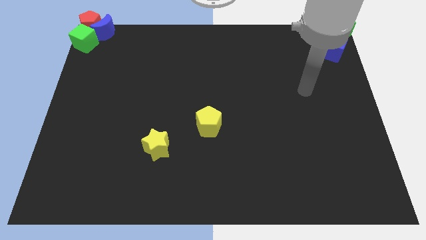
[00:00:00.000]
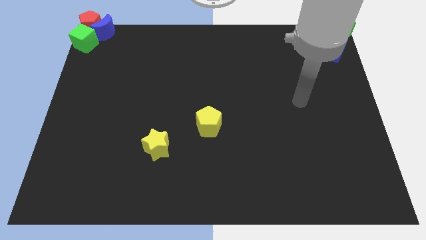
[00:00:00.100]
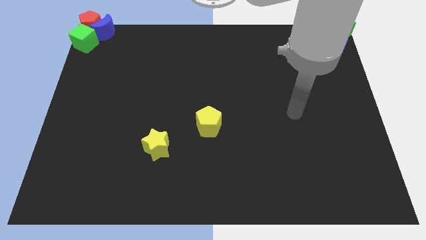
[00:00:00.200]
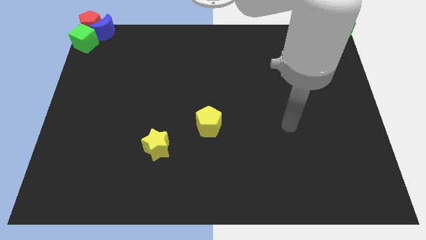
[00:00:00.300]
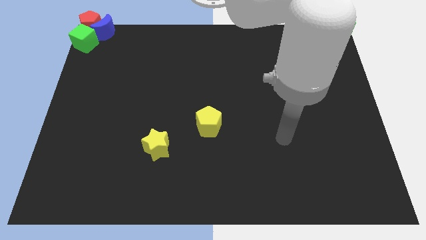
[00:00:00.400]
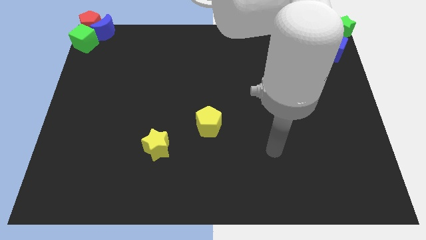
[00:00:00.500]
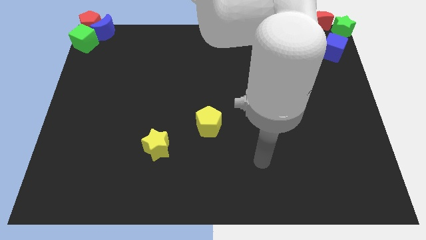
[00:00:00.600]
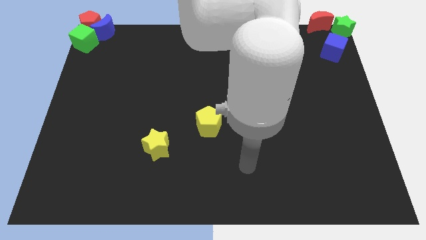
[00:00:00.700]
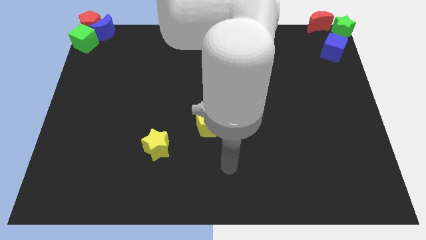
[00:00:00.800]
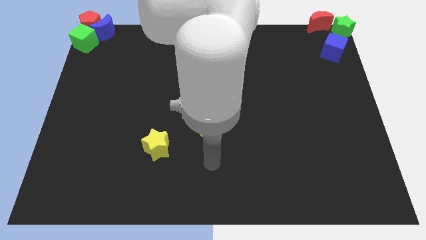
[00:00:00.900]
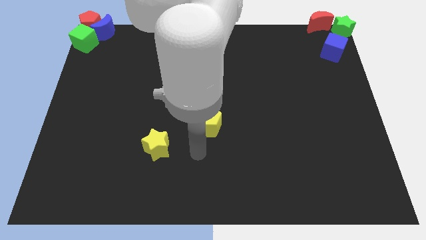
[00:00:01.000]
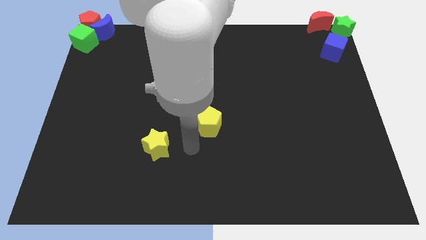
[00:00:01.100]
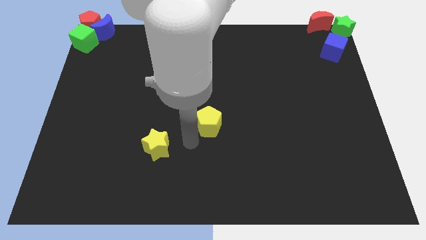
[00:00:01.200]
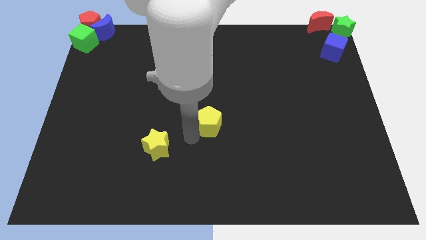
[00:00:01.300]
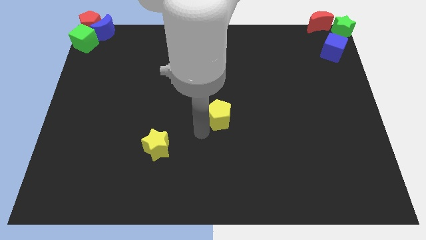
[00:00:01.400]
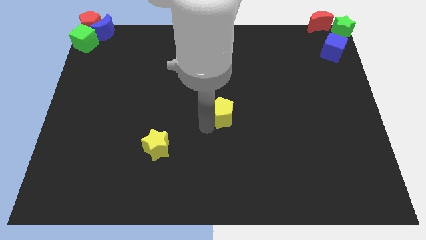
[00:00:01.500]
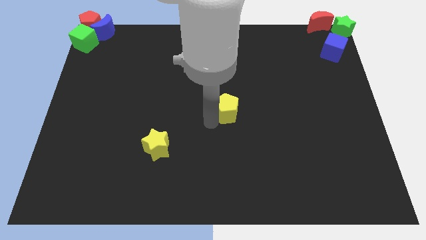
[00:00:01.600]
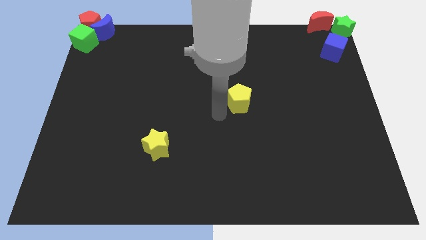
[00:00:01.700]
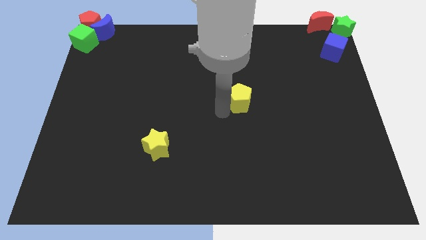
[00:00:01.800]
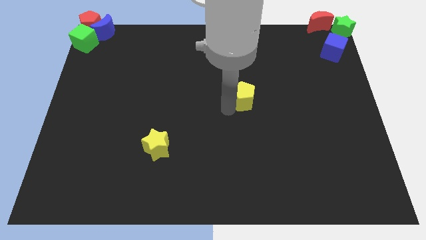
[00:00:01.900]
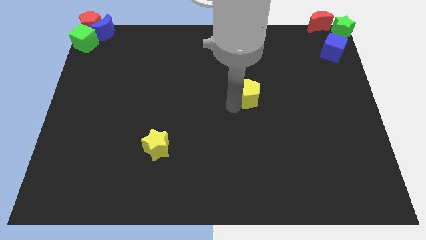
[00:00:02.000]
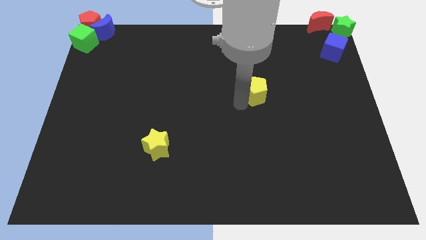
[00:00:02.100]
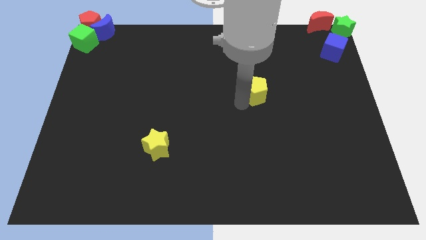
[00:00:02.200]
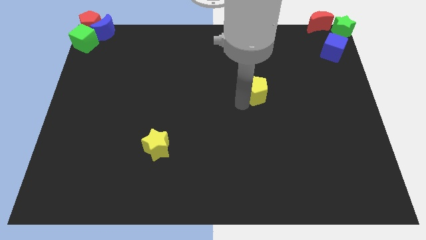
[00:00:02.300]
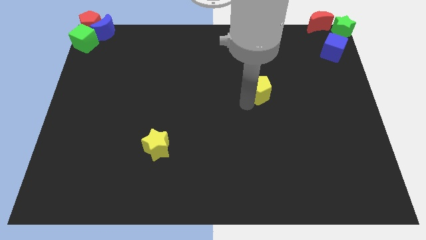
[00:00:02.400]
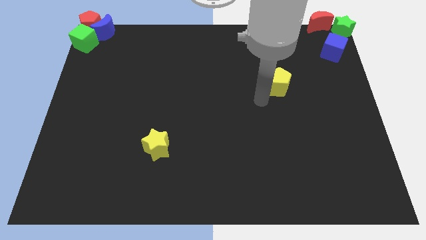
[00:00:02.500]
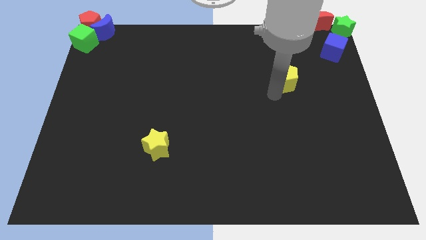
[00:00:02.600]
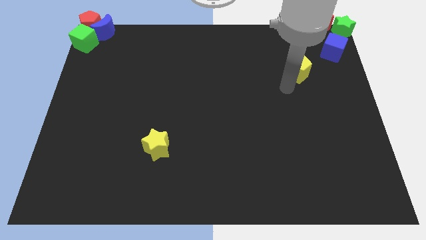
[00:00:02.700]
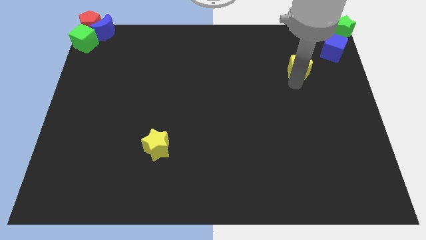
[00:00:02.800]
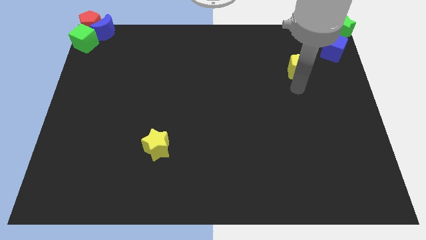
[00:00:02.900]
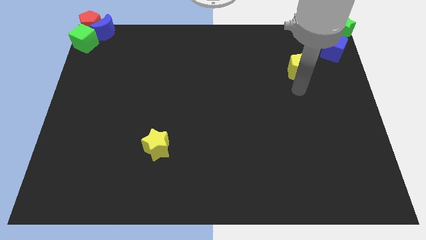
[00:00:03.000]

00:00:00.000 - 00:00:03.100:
push the yellow pentagon towards the top right

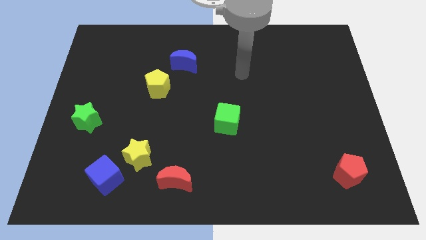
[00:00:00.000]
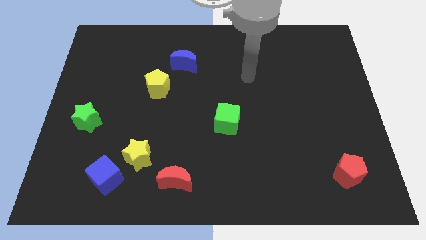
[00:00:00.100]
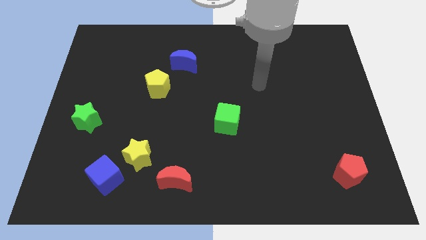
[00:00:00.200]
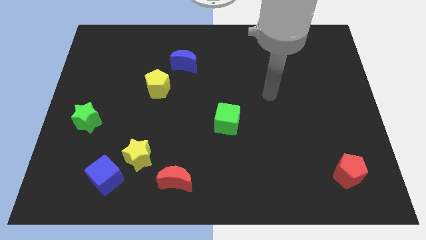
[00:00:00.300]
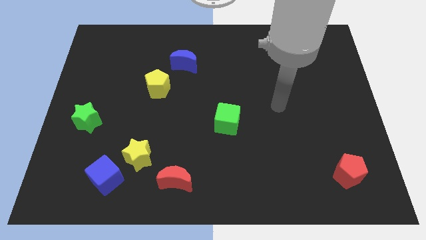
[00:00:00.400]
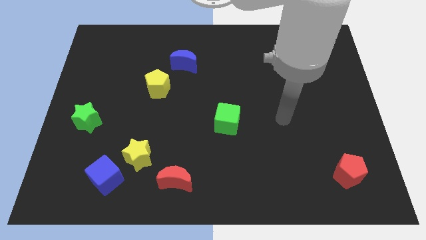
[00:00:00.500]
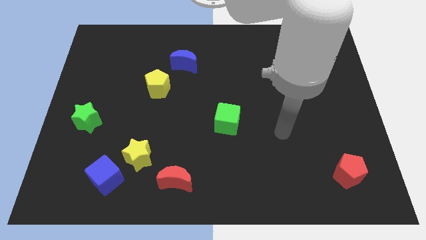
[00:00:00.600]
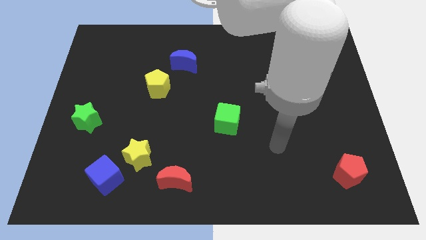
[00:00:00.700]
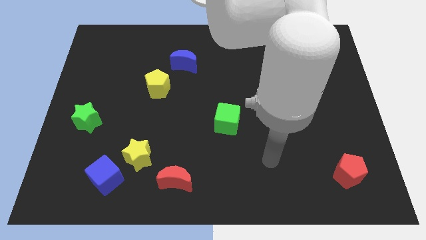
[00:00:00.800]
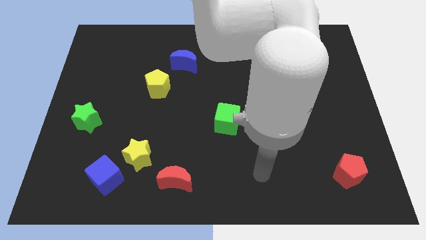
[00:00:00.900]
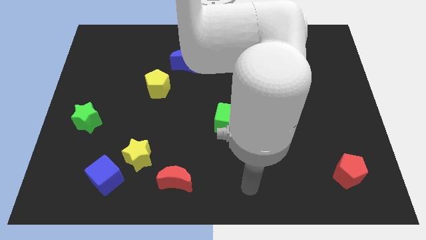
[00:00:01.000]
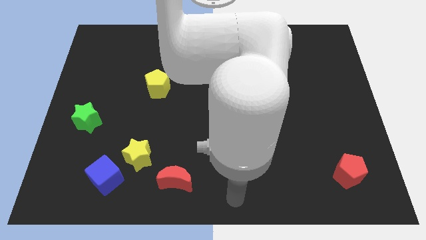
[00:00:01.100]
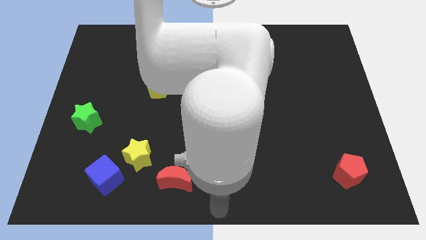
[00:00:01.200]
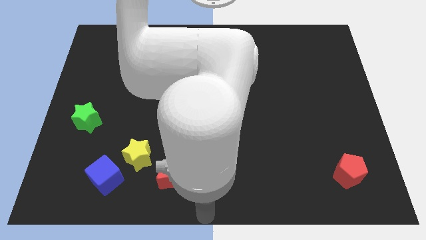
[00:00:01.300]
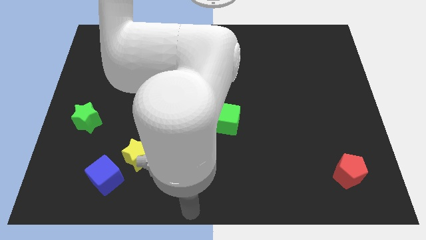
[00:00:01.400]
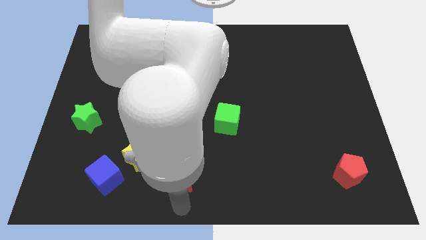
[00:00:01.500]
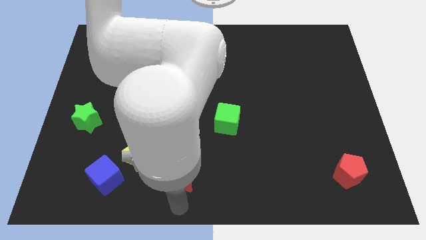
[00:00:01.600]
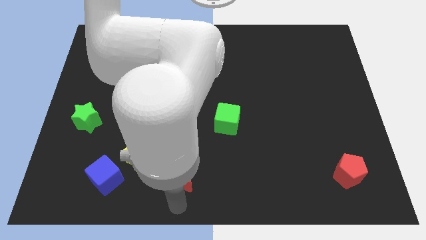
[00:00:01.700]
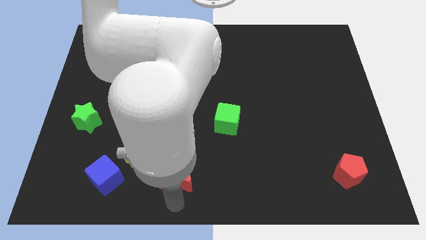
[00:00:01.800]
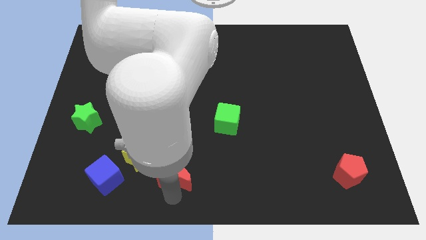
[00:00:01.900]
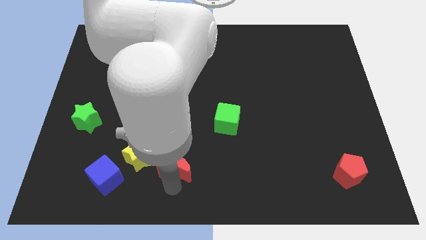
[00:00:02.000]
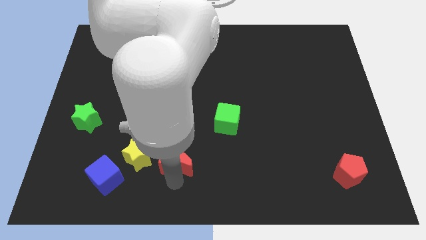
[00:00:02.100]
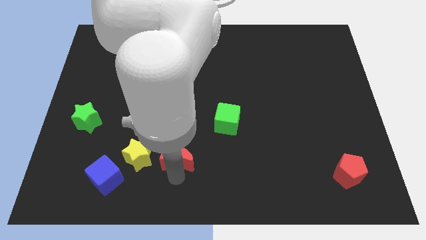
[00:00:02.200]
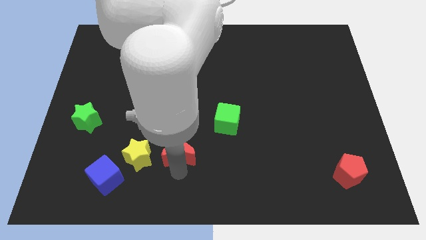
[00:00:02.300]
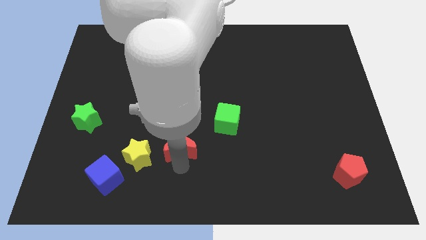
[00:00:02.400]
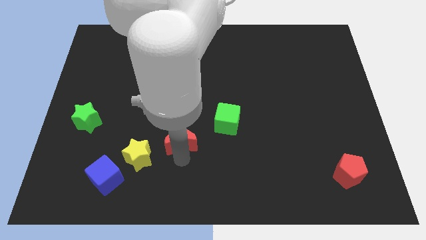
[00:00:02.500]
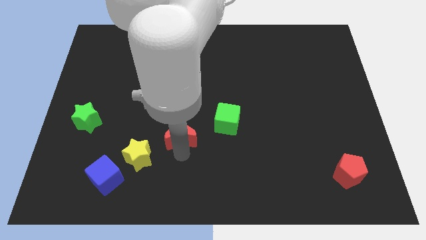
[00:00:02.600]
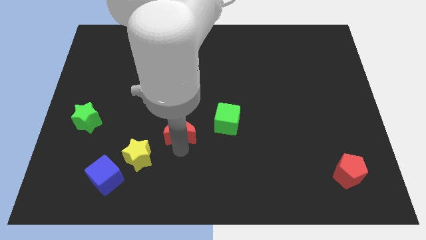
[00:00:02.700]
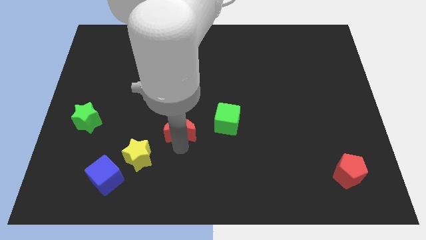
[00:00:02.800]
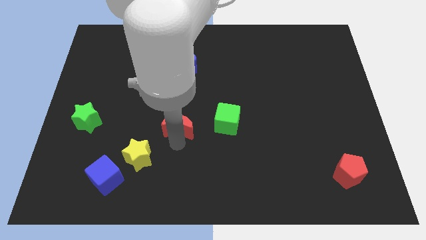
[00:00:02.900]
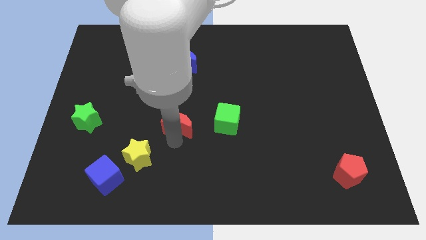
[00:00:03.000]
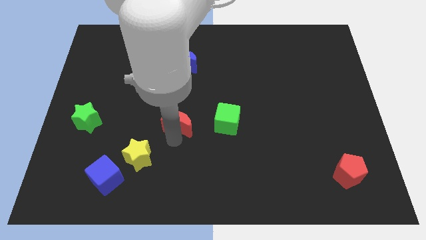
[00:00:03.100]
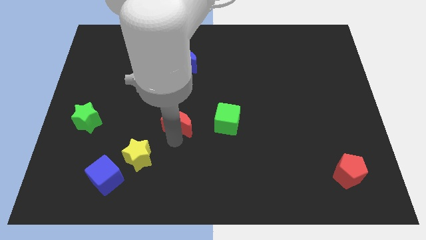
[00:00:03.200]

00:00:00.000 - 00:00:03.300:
bring the red crescent at the left side of the green cube

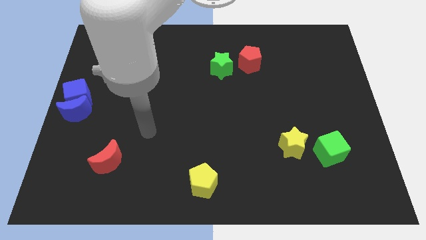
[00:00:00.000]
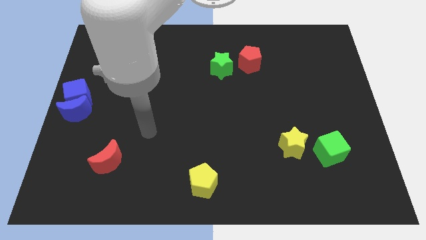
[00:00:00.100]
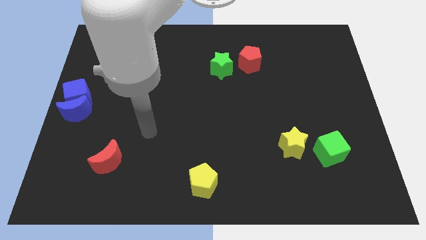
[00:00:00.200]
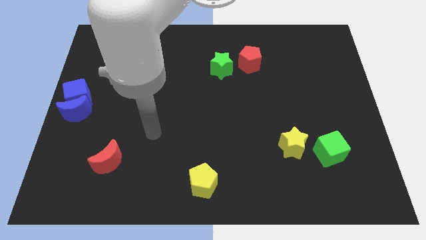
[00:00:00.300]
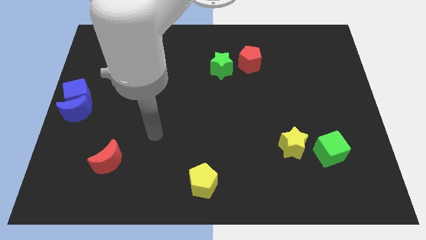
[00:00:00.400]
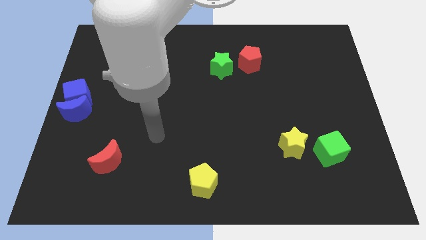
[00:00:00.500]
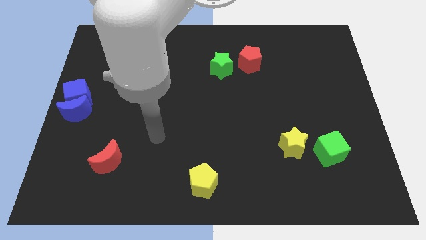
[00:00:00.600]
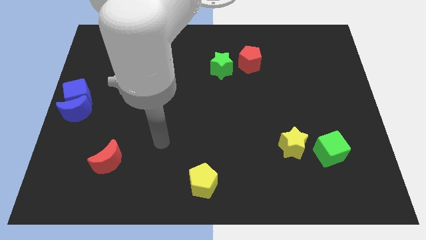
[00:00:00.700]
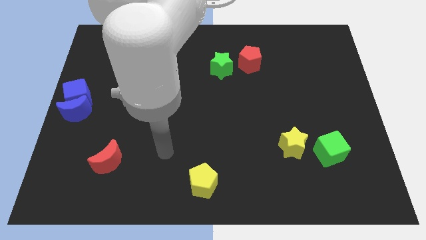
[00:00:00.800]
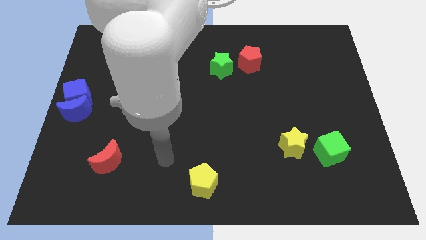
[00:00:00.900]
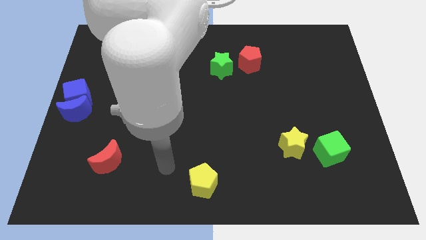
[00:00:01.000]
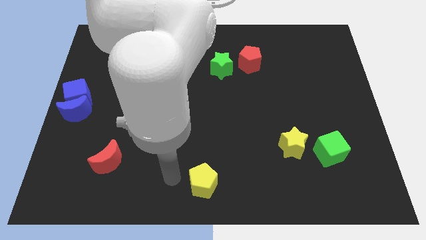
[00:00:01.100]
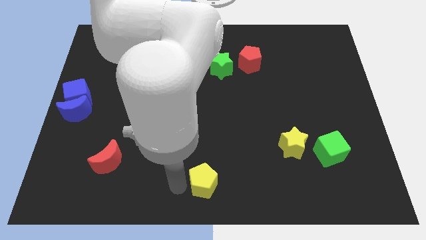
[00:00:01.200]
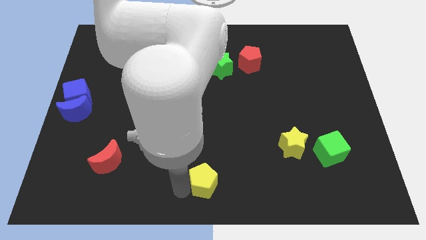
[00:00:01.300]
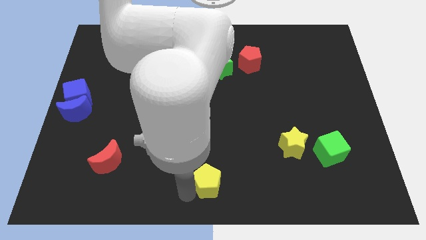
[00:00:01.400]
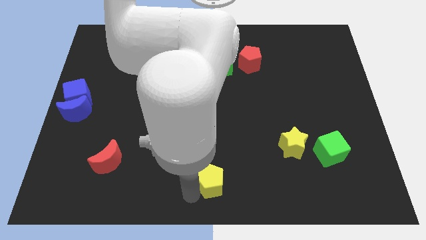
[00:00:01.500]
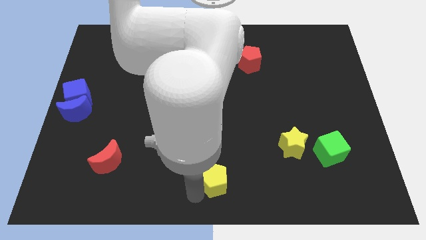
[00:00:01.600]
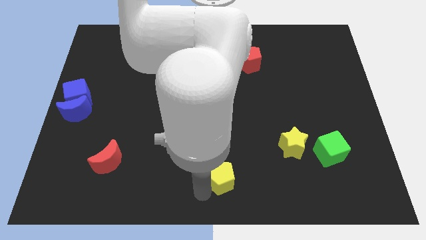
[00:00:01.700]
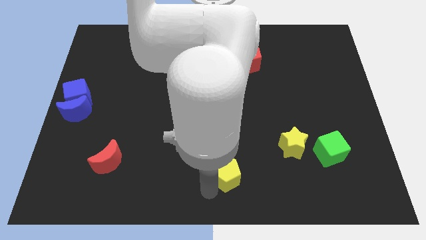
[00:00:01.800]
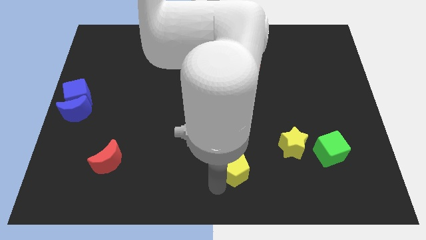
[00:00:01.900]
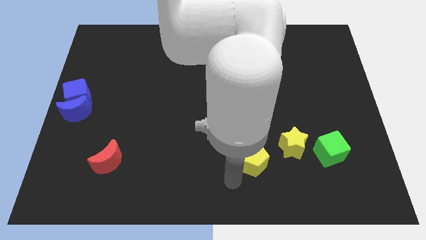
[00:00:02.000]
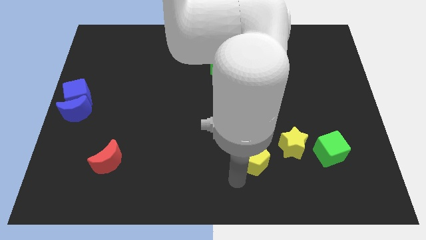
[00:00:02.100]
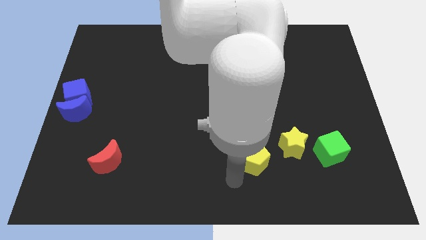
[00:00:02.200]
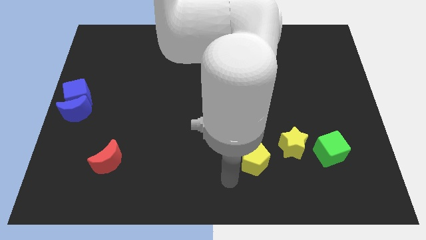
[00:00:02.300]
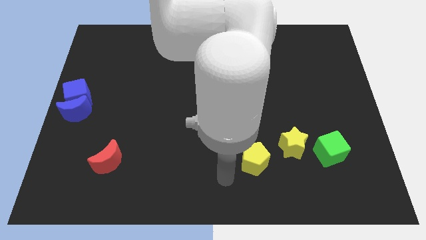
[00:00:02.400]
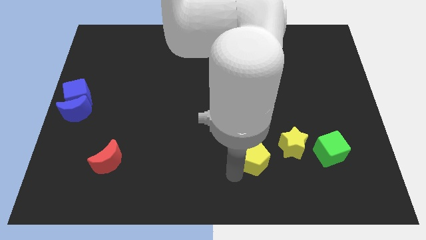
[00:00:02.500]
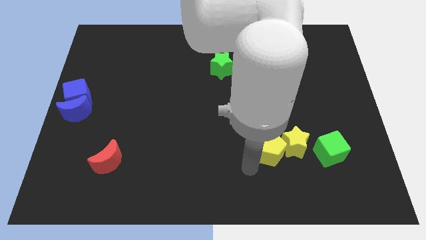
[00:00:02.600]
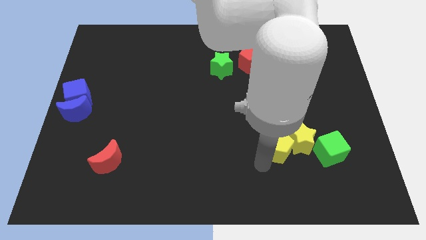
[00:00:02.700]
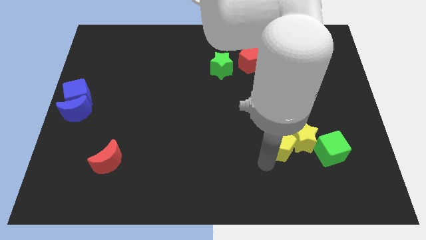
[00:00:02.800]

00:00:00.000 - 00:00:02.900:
push the yellow pentagon into the left of the yellow star
